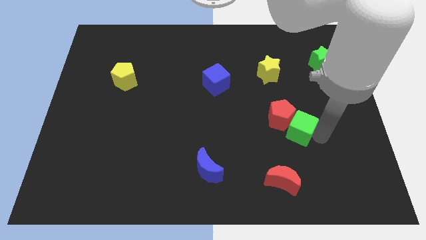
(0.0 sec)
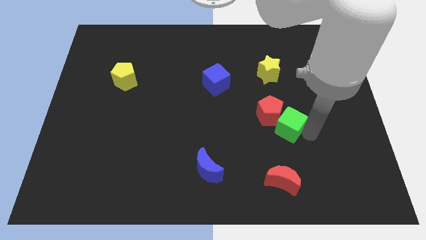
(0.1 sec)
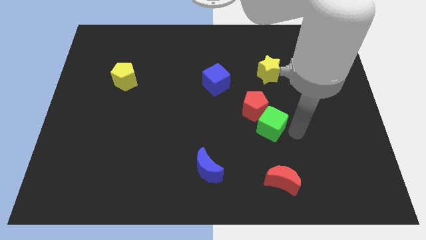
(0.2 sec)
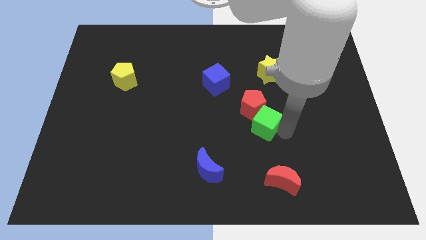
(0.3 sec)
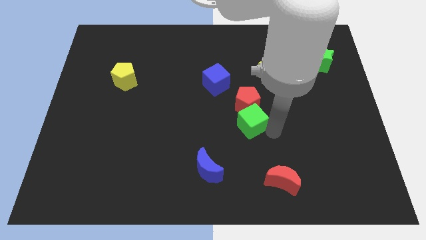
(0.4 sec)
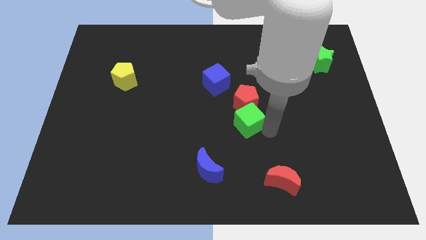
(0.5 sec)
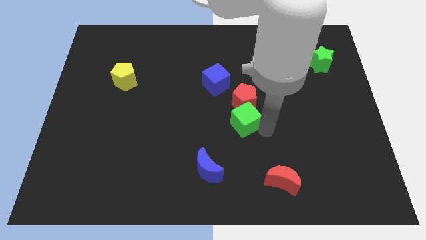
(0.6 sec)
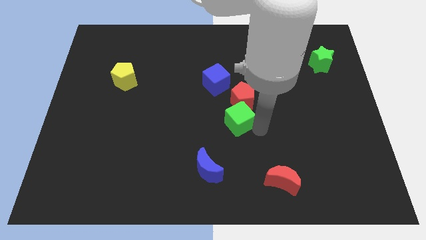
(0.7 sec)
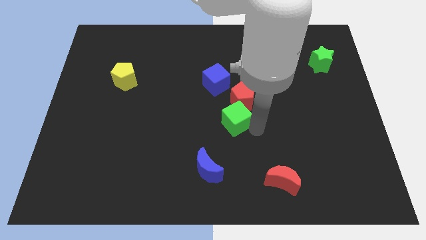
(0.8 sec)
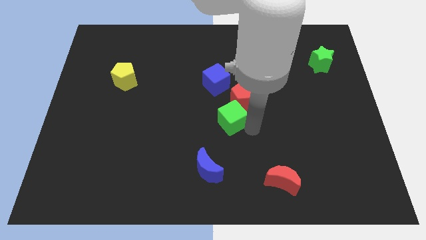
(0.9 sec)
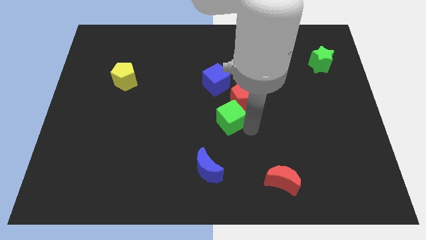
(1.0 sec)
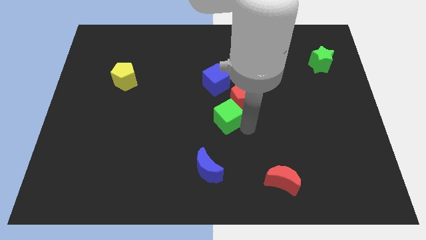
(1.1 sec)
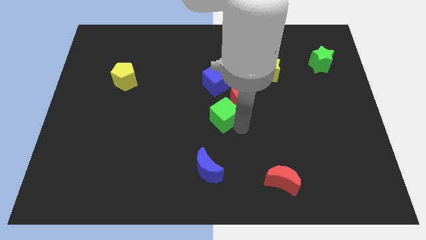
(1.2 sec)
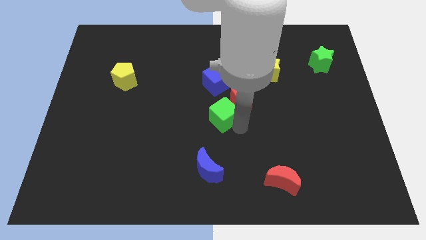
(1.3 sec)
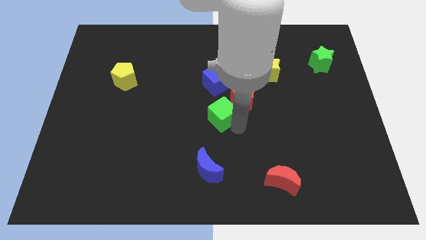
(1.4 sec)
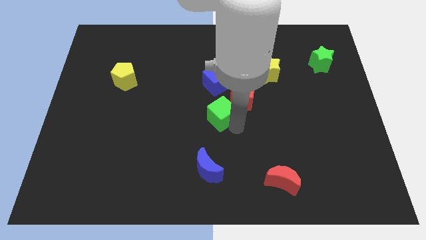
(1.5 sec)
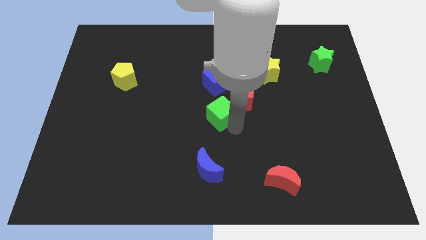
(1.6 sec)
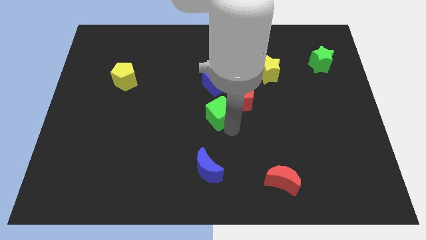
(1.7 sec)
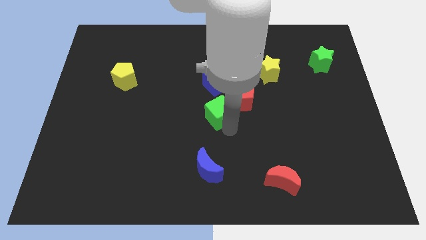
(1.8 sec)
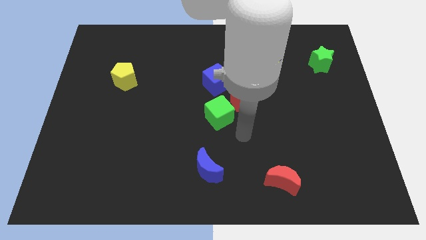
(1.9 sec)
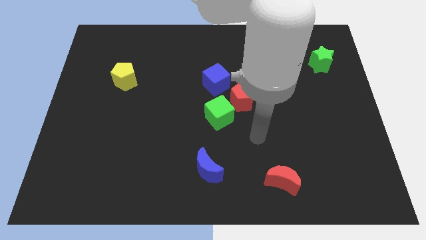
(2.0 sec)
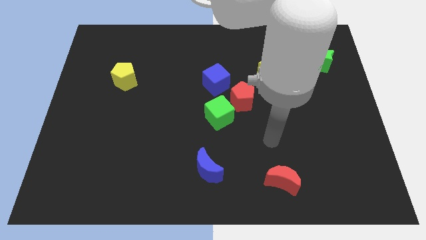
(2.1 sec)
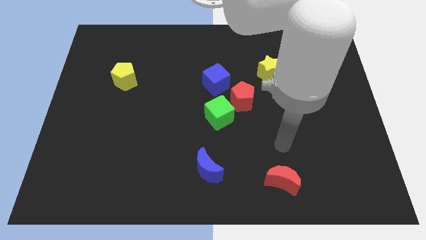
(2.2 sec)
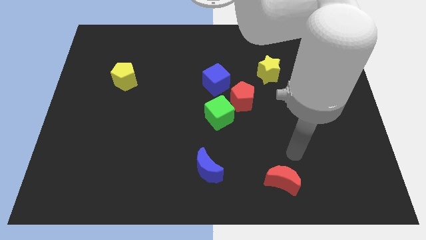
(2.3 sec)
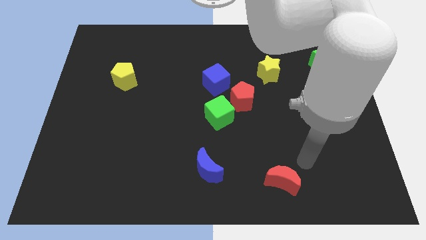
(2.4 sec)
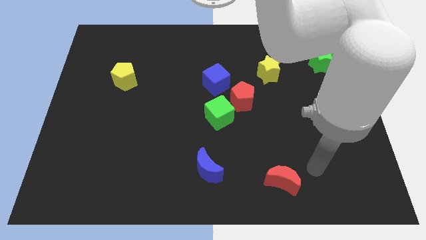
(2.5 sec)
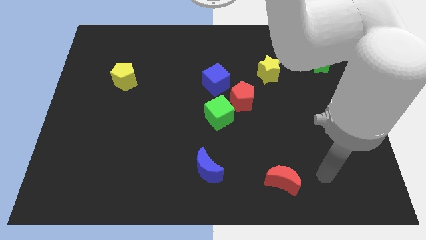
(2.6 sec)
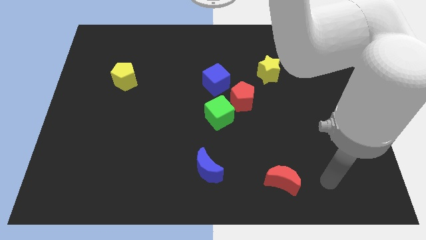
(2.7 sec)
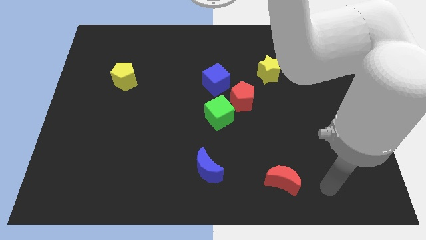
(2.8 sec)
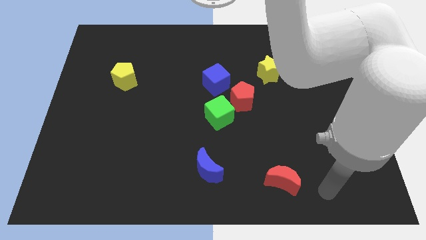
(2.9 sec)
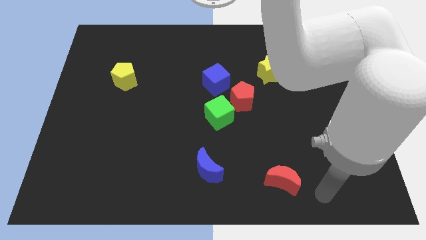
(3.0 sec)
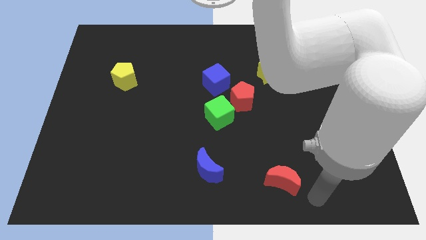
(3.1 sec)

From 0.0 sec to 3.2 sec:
place the red pentagon and green cube at the center of the board

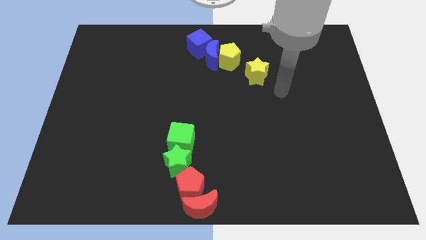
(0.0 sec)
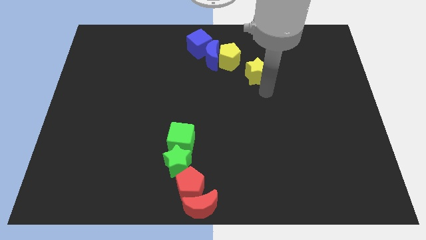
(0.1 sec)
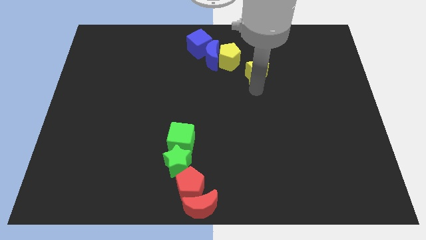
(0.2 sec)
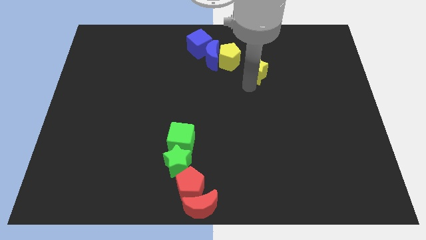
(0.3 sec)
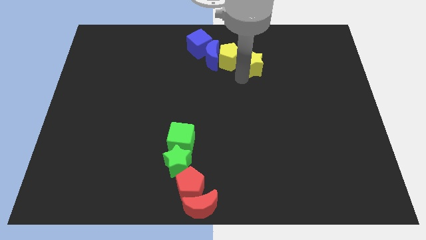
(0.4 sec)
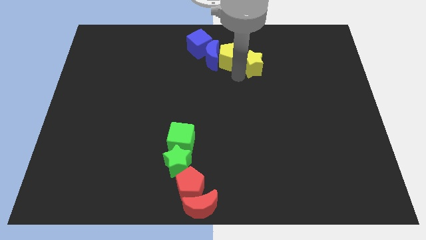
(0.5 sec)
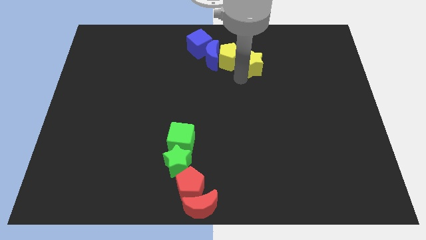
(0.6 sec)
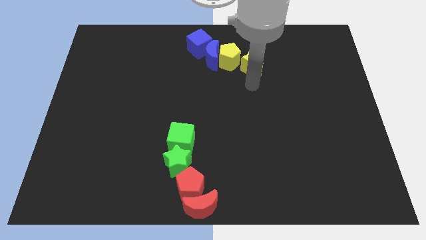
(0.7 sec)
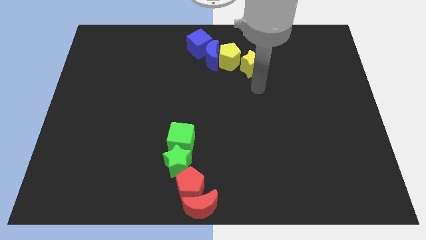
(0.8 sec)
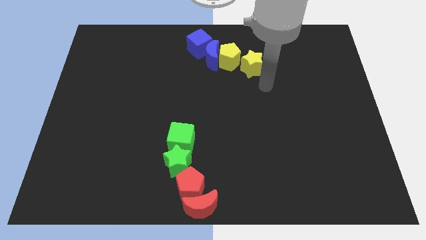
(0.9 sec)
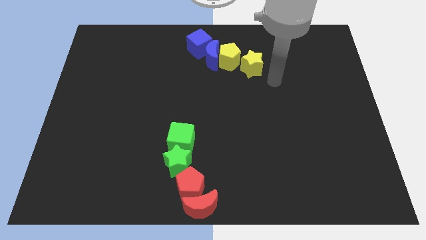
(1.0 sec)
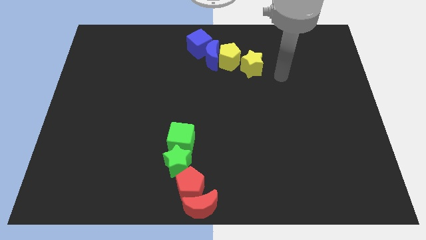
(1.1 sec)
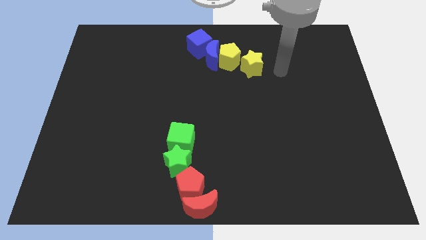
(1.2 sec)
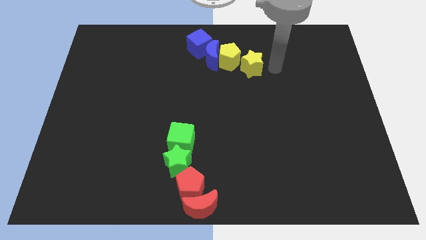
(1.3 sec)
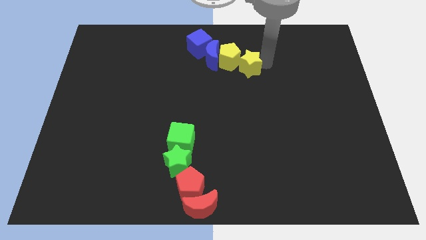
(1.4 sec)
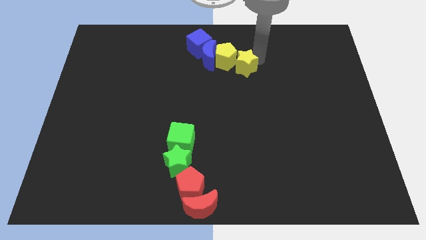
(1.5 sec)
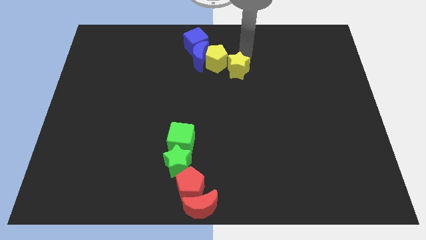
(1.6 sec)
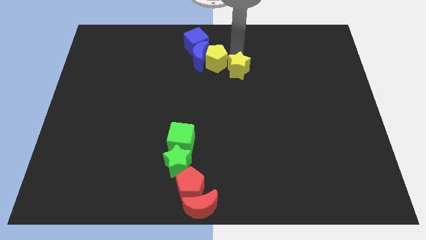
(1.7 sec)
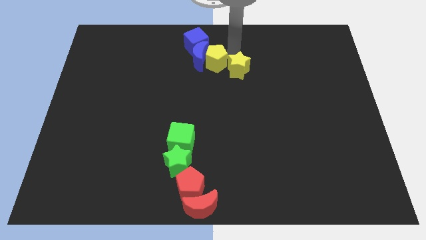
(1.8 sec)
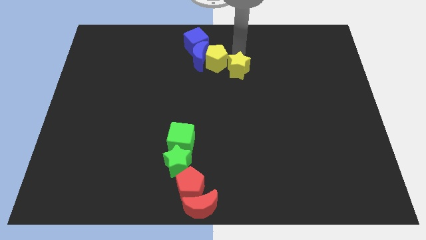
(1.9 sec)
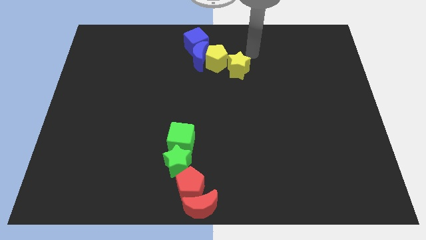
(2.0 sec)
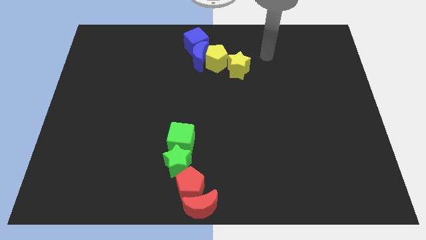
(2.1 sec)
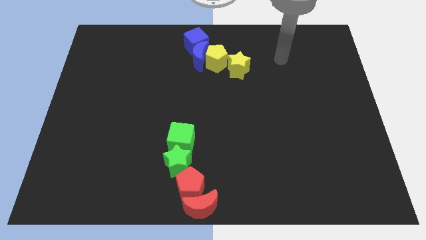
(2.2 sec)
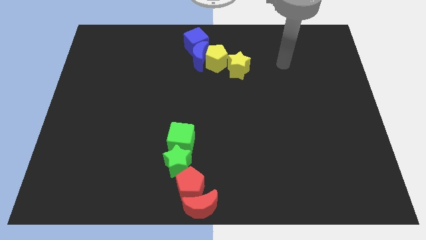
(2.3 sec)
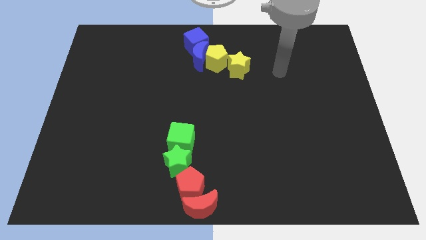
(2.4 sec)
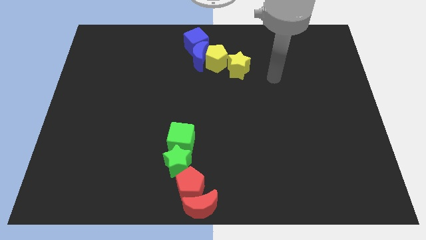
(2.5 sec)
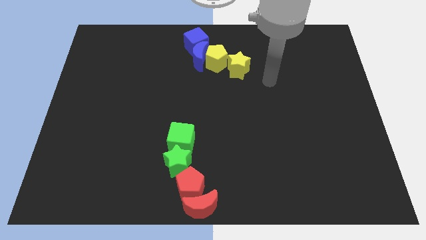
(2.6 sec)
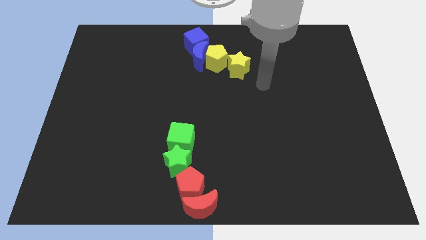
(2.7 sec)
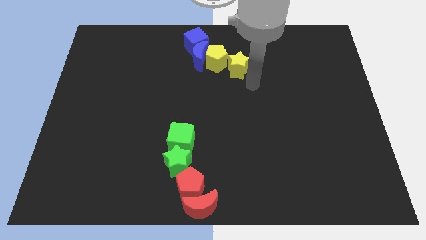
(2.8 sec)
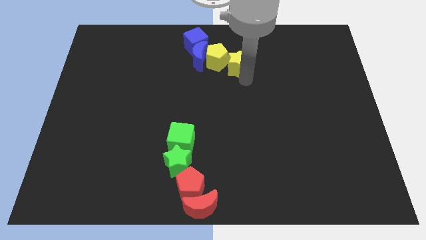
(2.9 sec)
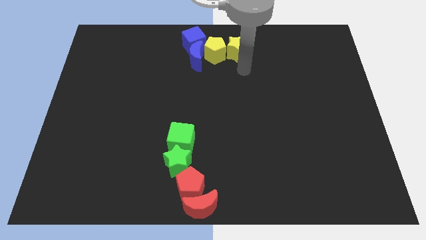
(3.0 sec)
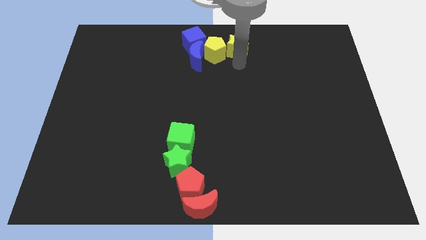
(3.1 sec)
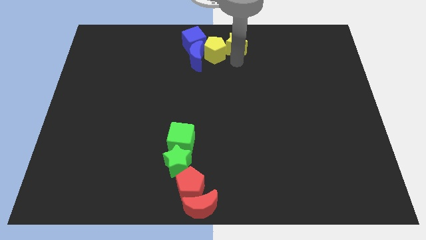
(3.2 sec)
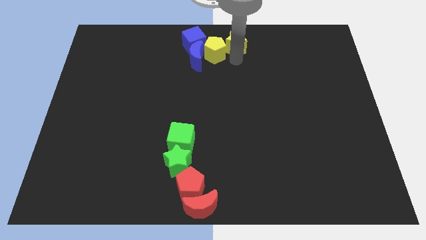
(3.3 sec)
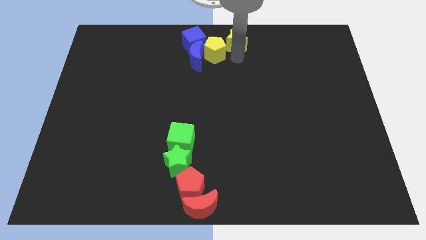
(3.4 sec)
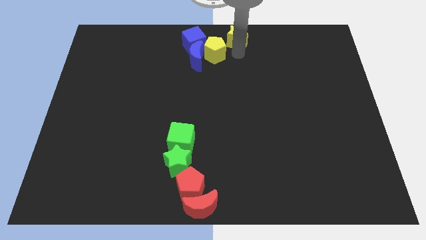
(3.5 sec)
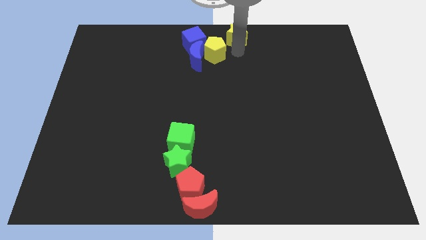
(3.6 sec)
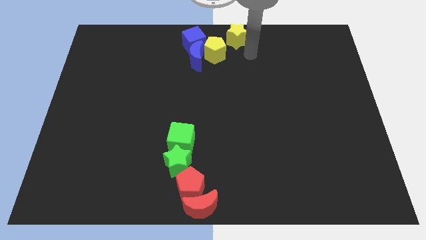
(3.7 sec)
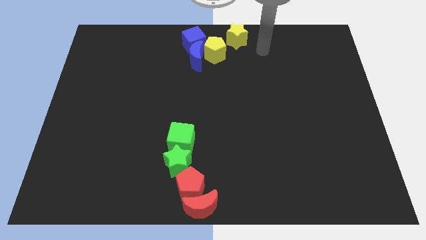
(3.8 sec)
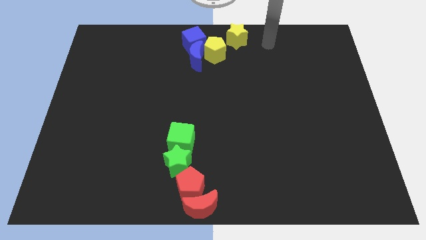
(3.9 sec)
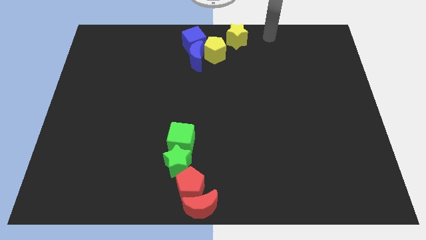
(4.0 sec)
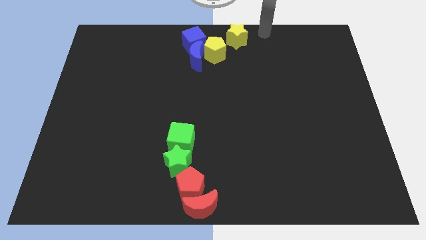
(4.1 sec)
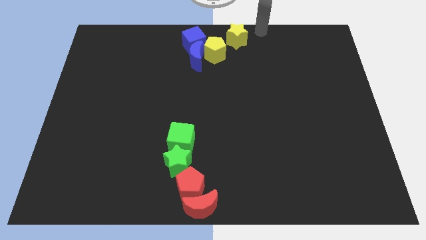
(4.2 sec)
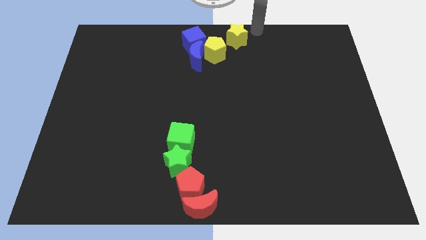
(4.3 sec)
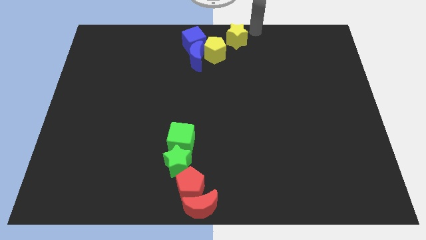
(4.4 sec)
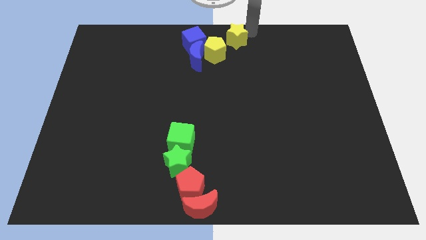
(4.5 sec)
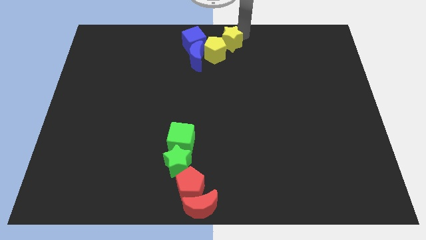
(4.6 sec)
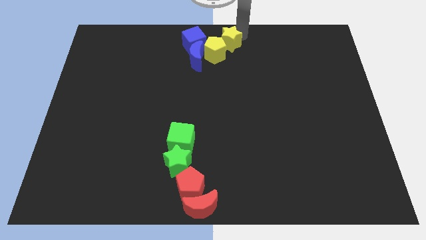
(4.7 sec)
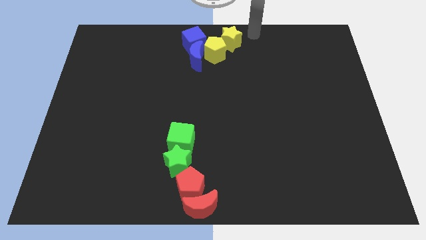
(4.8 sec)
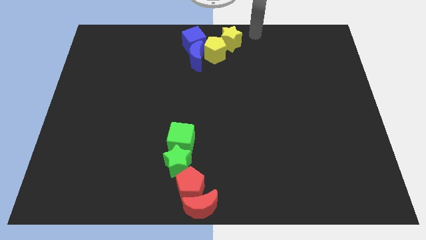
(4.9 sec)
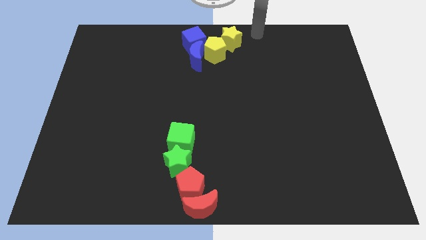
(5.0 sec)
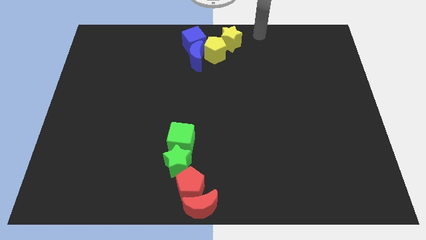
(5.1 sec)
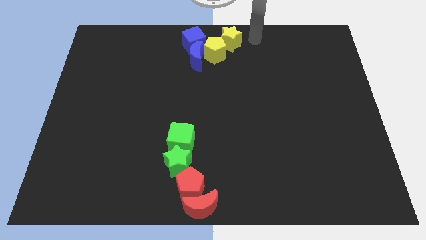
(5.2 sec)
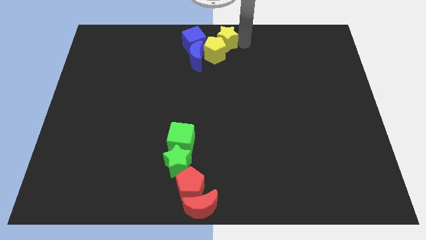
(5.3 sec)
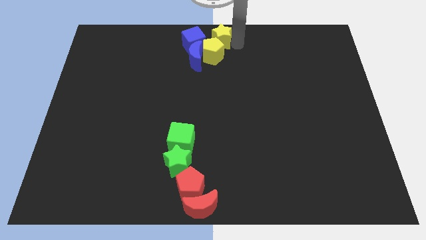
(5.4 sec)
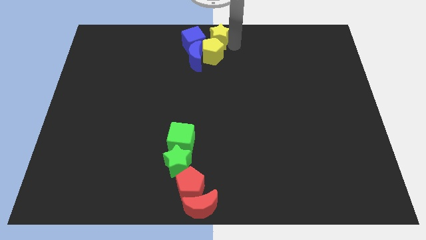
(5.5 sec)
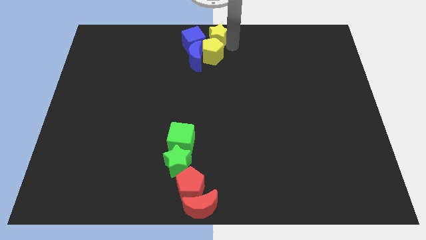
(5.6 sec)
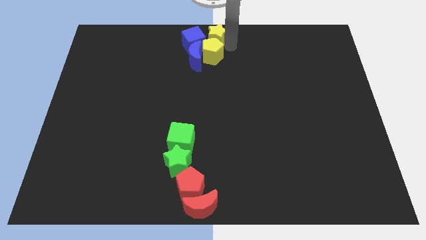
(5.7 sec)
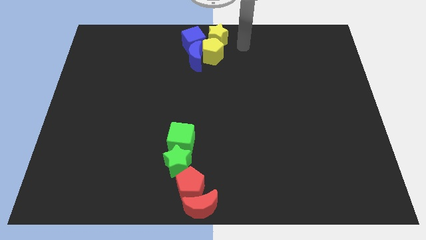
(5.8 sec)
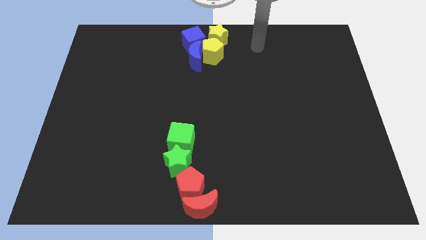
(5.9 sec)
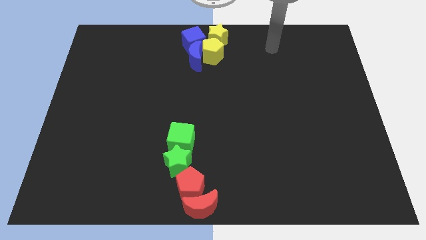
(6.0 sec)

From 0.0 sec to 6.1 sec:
place the yellow star on top of the yellow pentagon
